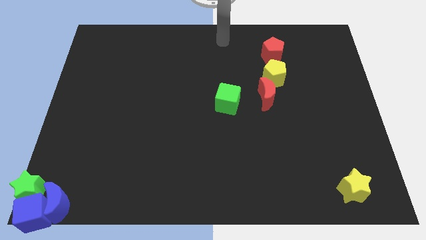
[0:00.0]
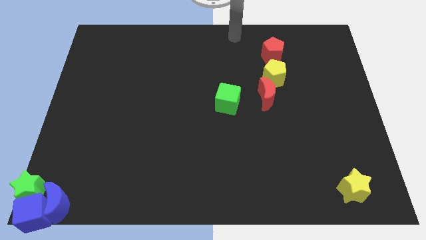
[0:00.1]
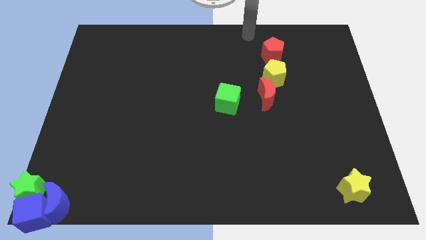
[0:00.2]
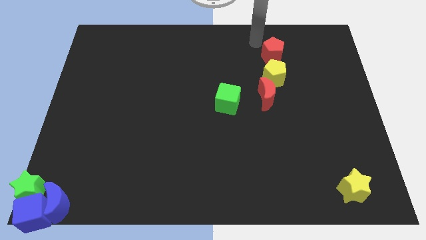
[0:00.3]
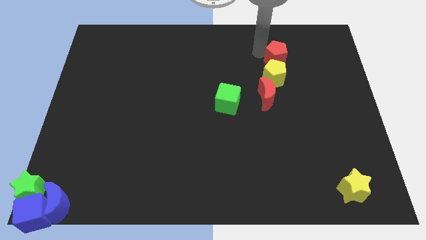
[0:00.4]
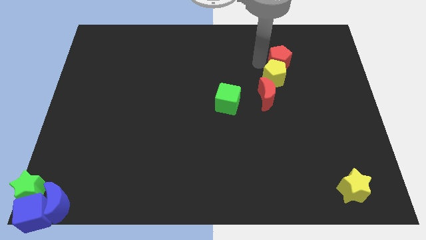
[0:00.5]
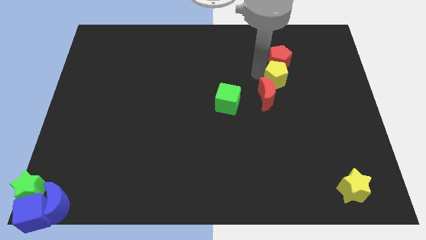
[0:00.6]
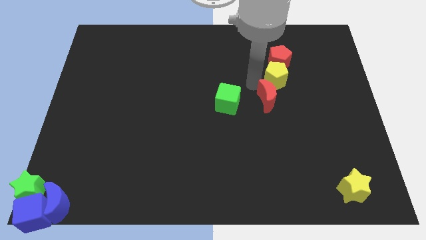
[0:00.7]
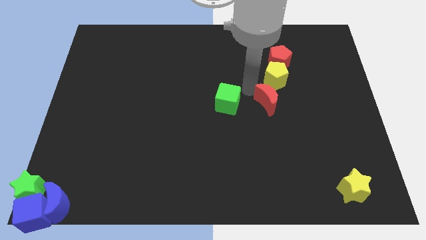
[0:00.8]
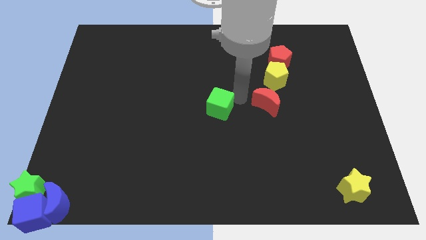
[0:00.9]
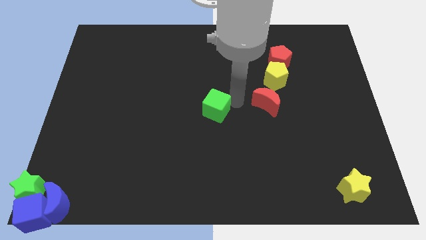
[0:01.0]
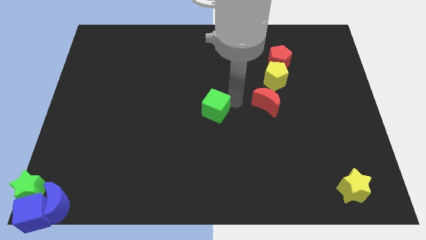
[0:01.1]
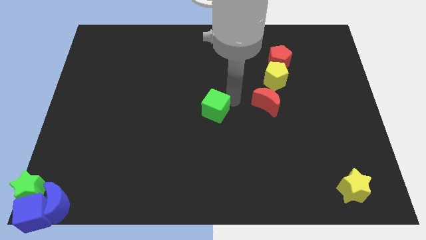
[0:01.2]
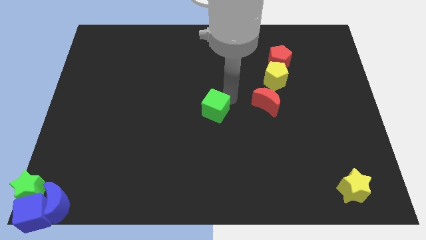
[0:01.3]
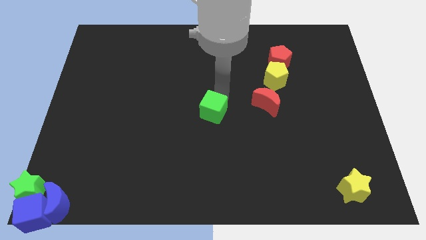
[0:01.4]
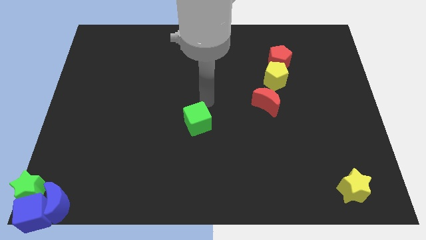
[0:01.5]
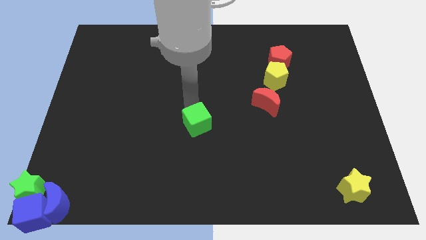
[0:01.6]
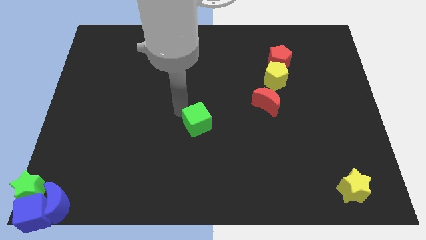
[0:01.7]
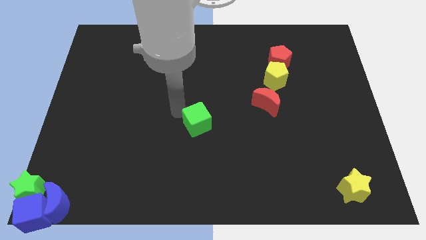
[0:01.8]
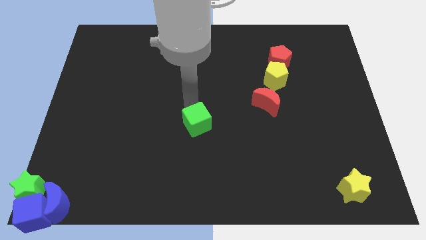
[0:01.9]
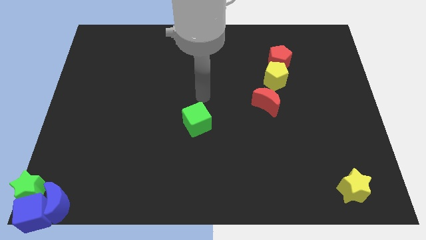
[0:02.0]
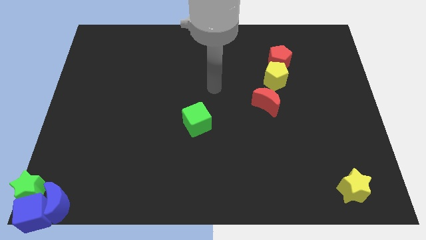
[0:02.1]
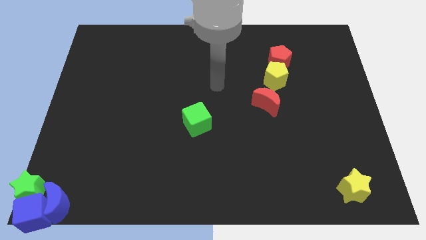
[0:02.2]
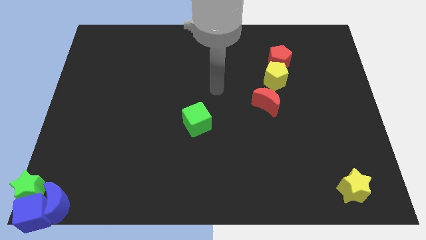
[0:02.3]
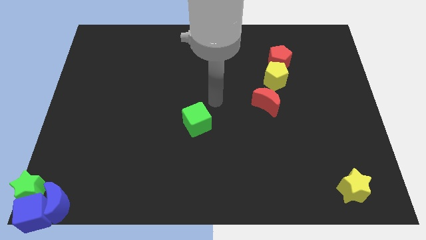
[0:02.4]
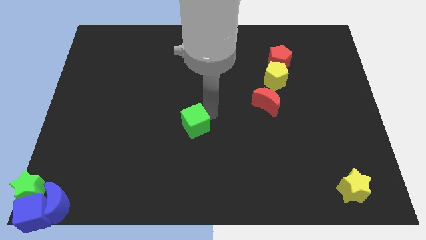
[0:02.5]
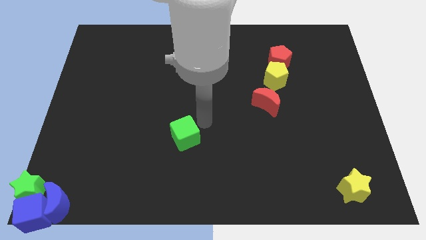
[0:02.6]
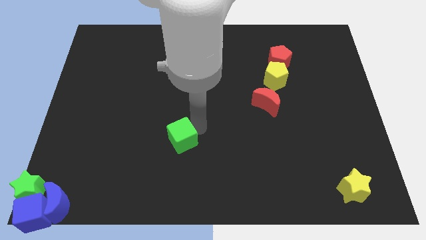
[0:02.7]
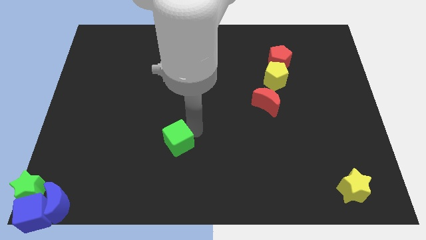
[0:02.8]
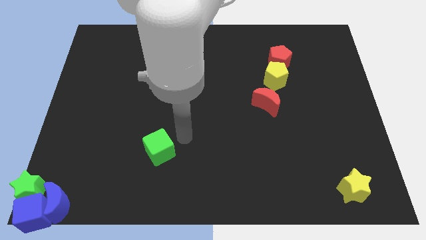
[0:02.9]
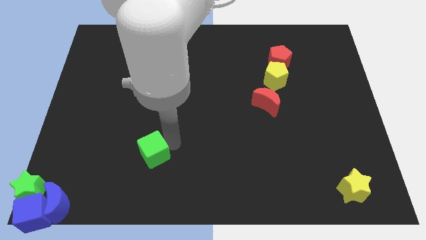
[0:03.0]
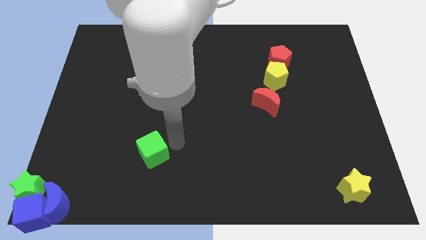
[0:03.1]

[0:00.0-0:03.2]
push the green cube towards the bottom

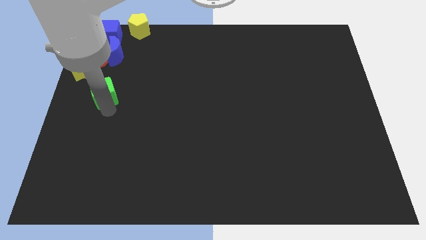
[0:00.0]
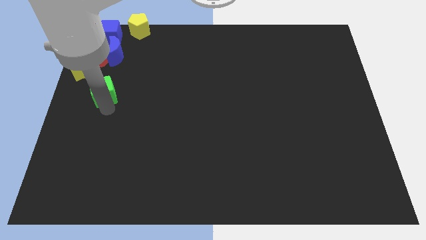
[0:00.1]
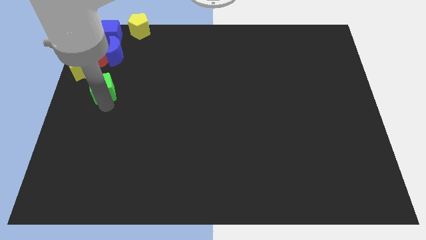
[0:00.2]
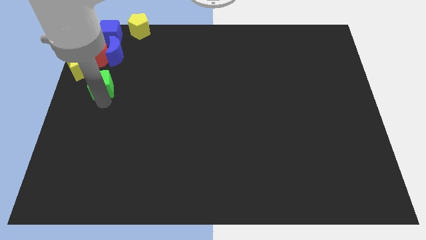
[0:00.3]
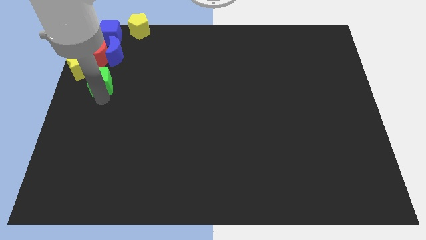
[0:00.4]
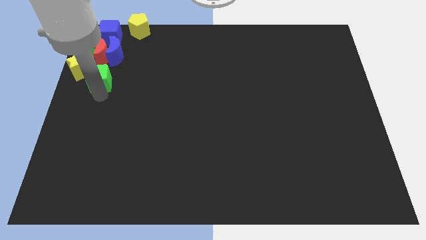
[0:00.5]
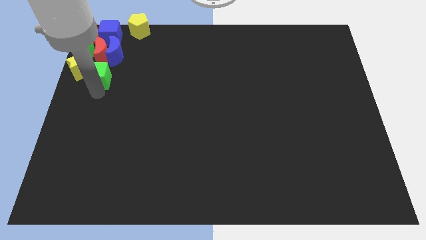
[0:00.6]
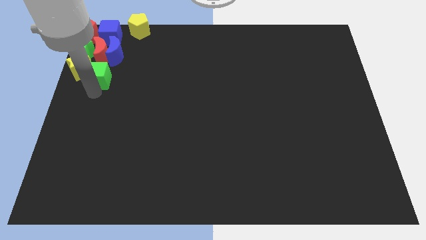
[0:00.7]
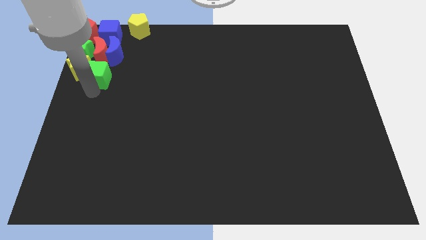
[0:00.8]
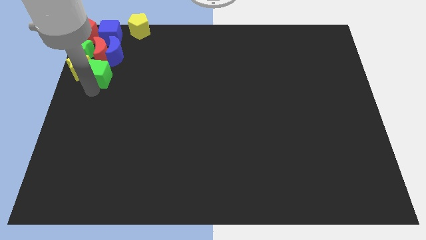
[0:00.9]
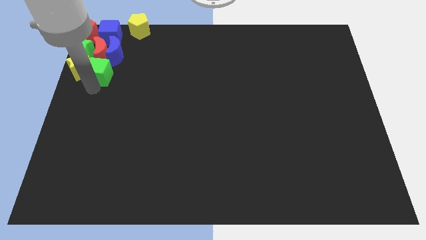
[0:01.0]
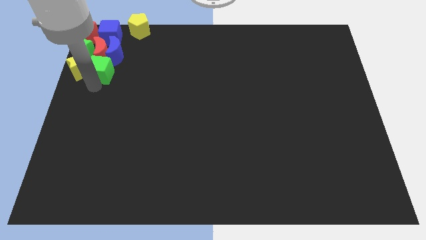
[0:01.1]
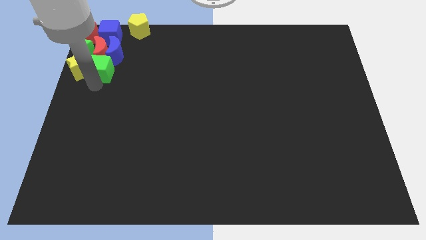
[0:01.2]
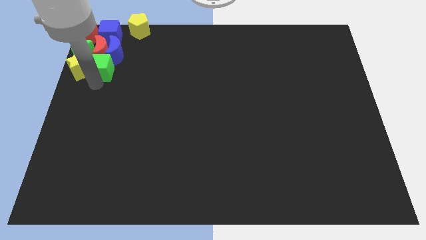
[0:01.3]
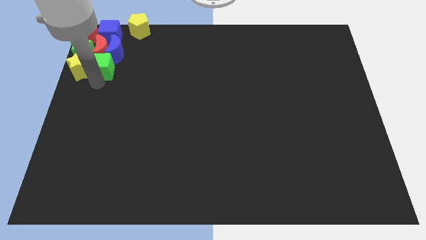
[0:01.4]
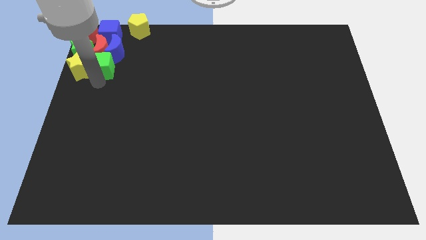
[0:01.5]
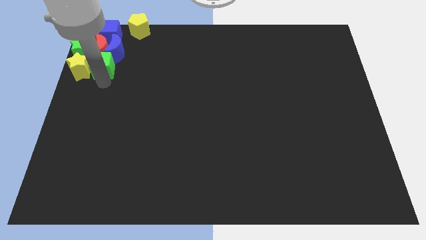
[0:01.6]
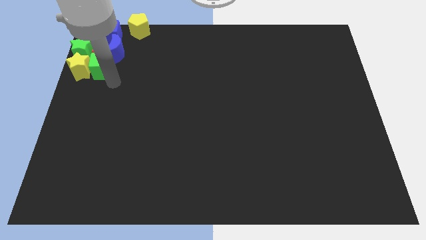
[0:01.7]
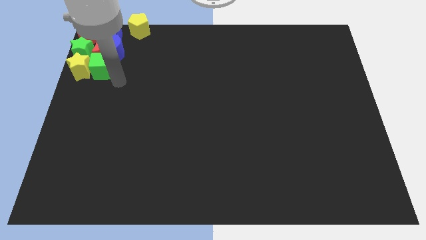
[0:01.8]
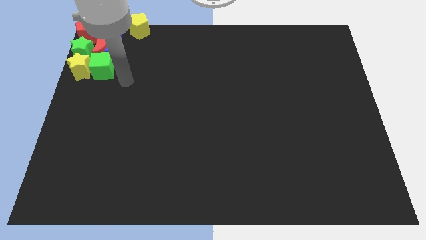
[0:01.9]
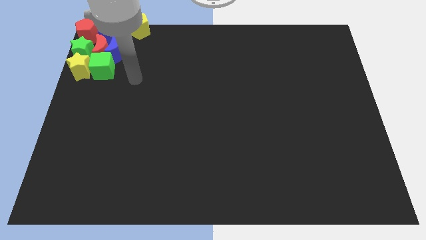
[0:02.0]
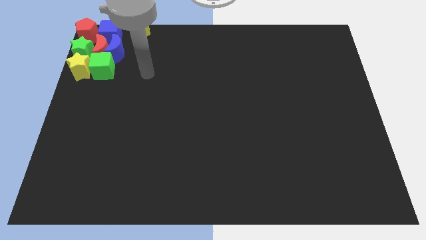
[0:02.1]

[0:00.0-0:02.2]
place the green cube below the red an blue moon

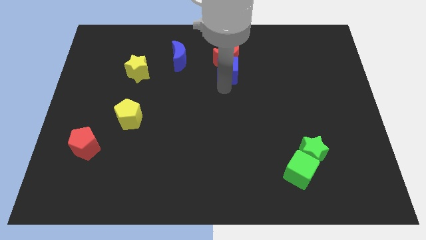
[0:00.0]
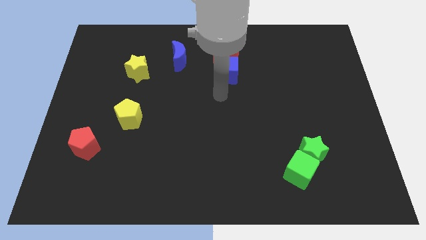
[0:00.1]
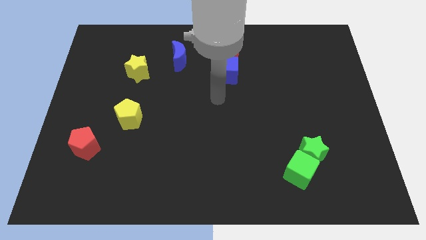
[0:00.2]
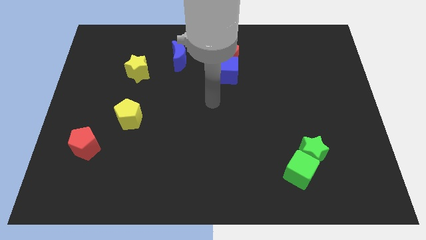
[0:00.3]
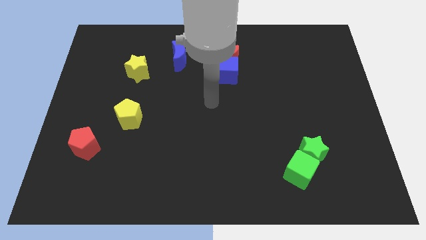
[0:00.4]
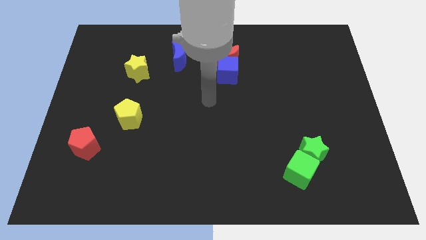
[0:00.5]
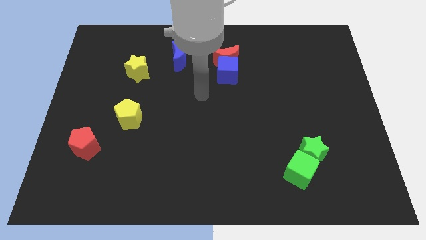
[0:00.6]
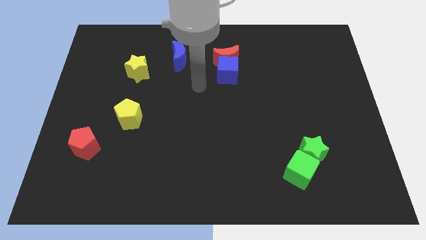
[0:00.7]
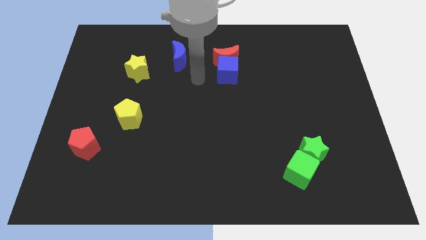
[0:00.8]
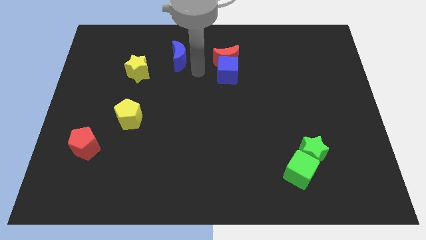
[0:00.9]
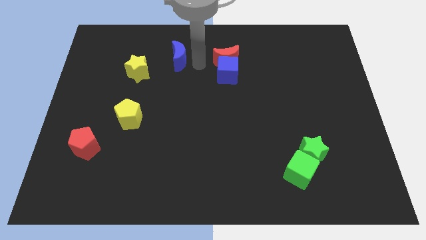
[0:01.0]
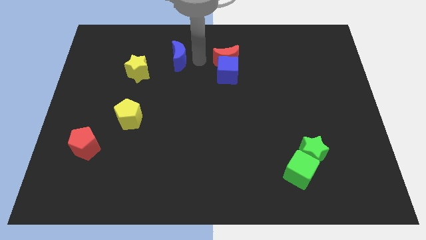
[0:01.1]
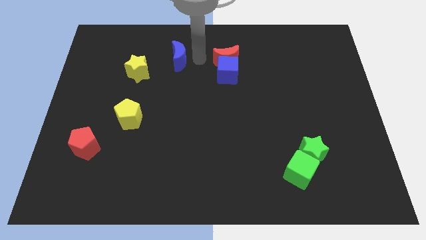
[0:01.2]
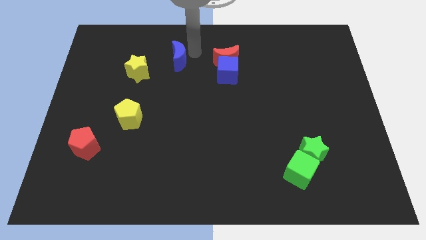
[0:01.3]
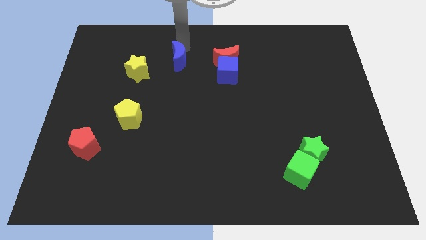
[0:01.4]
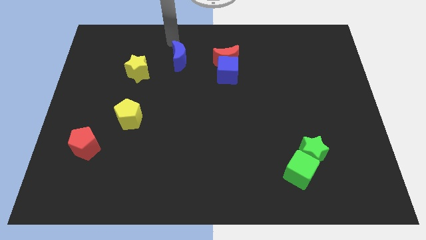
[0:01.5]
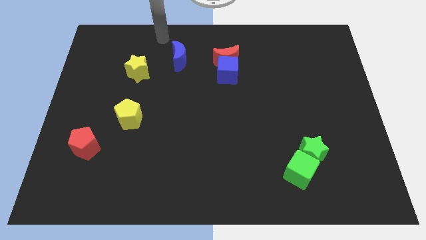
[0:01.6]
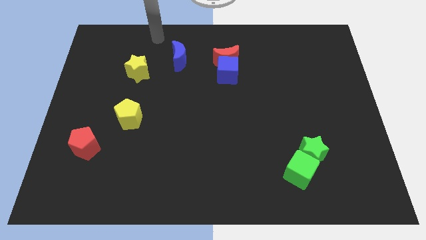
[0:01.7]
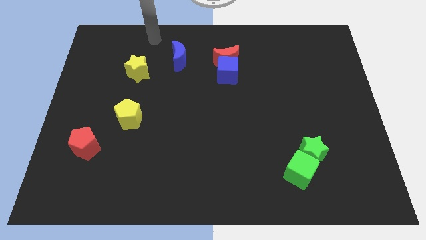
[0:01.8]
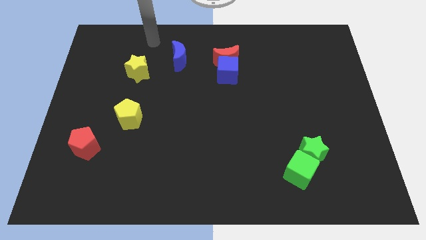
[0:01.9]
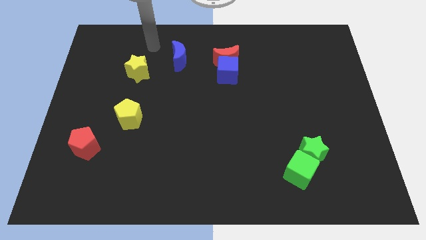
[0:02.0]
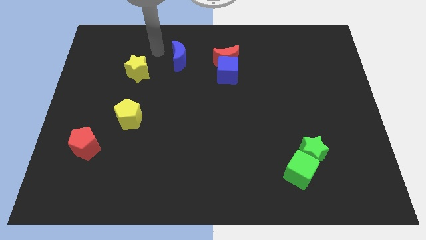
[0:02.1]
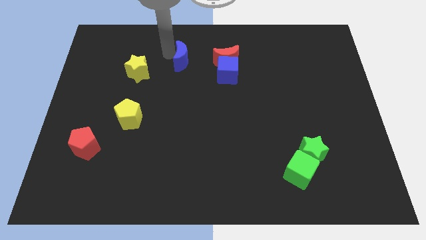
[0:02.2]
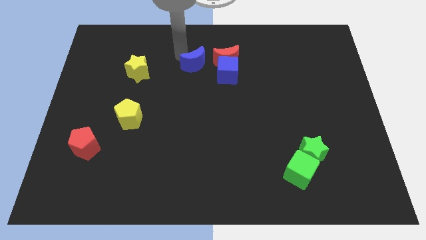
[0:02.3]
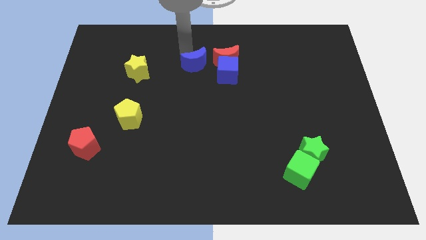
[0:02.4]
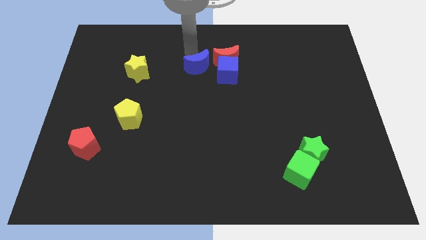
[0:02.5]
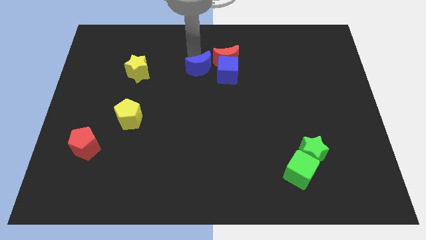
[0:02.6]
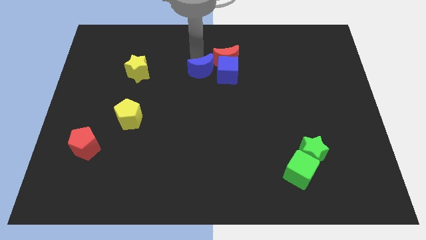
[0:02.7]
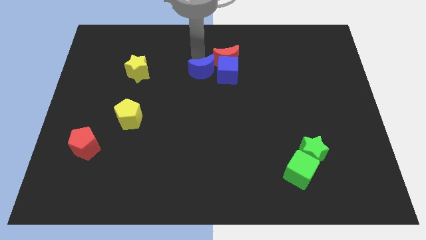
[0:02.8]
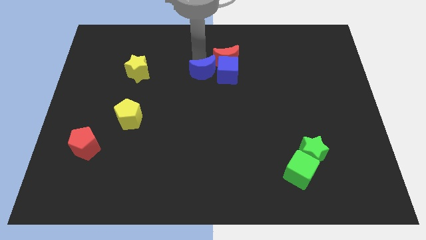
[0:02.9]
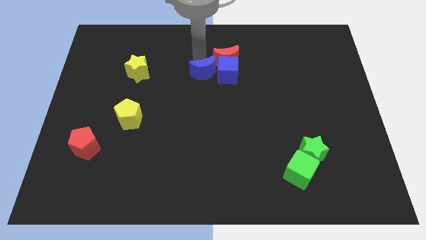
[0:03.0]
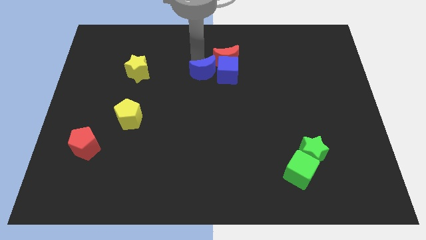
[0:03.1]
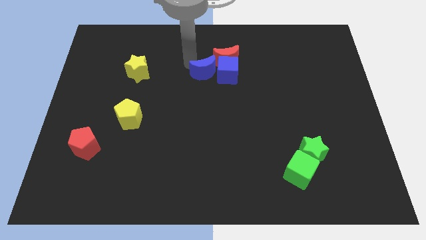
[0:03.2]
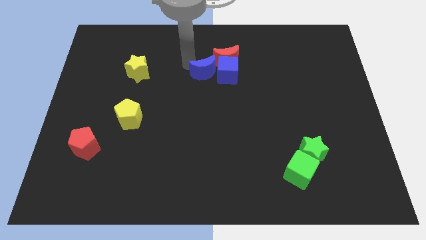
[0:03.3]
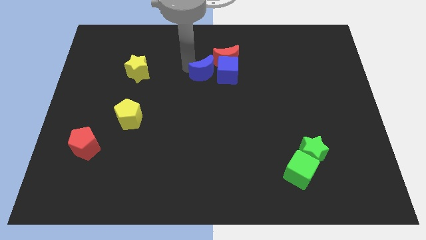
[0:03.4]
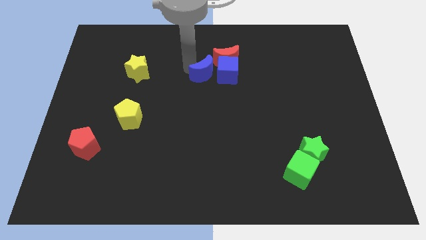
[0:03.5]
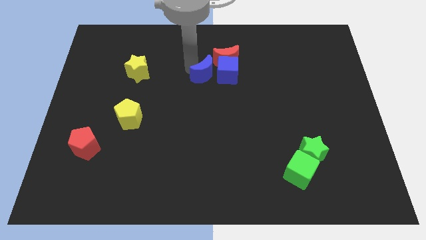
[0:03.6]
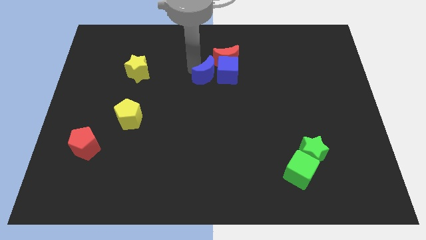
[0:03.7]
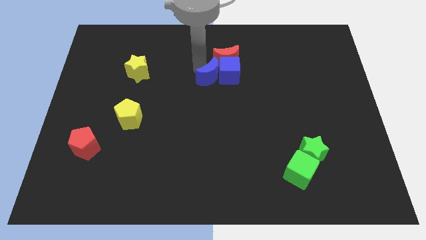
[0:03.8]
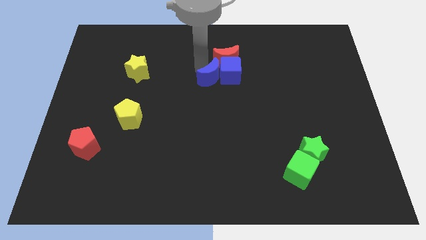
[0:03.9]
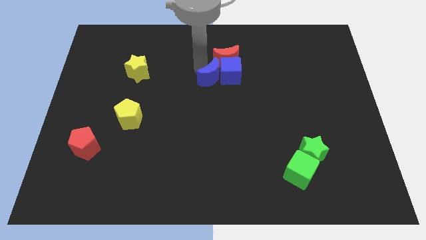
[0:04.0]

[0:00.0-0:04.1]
push the blue moon into the blue cube
